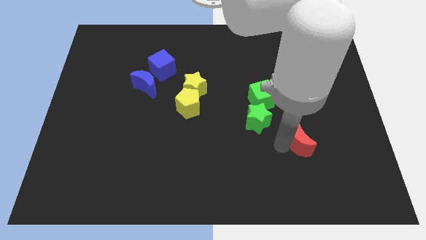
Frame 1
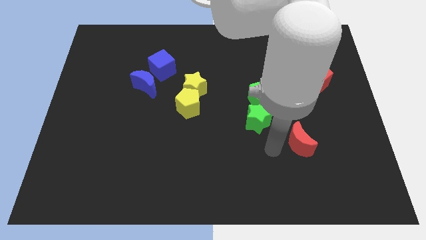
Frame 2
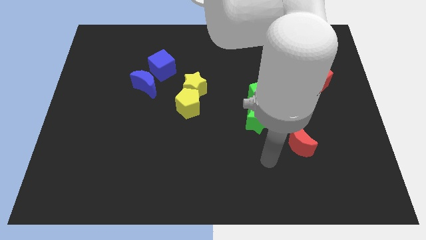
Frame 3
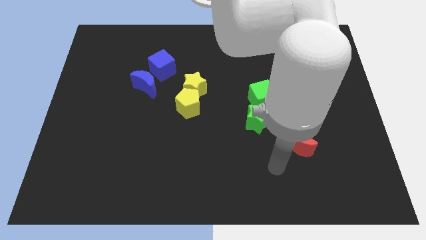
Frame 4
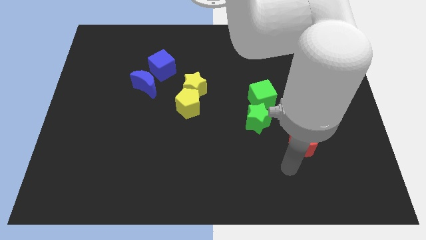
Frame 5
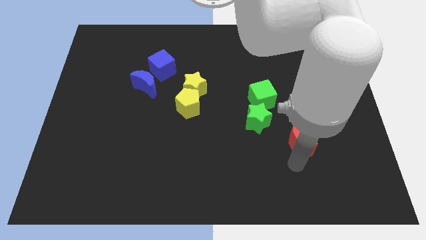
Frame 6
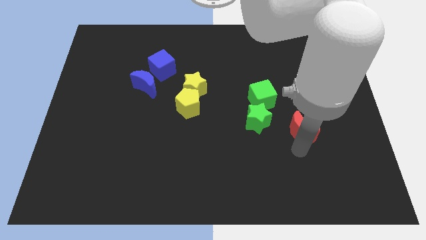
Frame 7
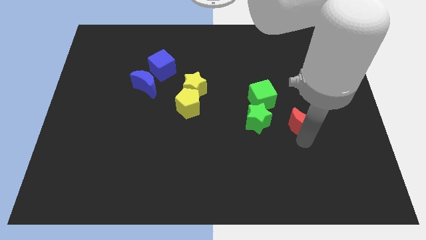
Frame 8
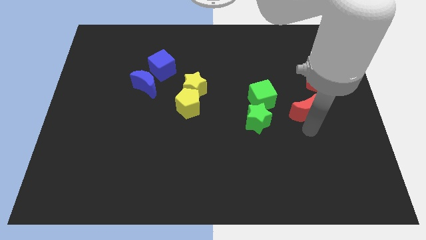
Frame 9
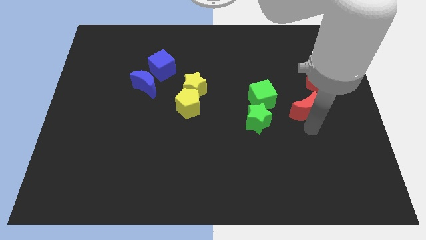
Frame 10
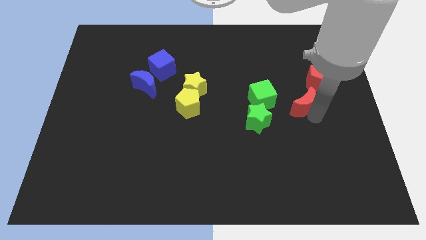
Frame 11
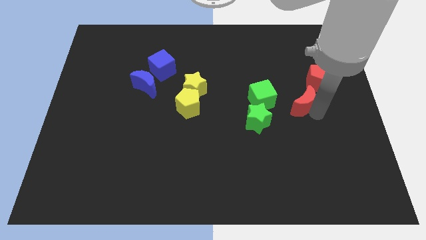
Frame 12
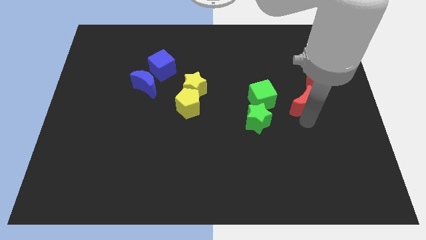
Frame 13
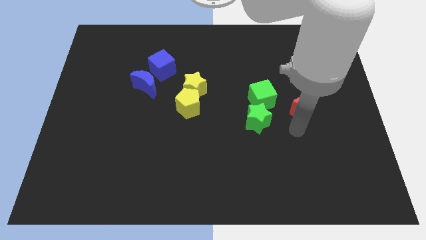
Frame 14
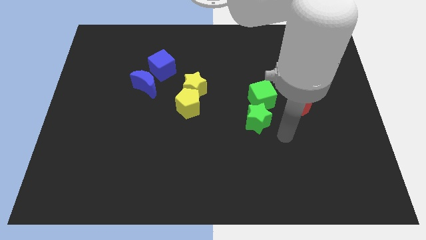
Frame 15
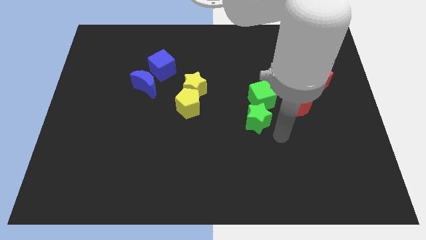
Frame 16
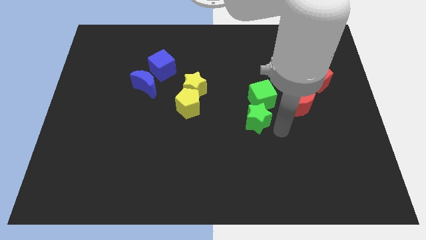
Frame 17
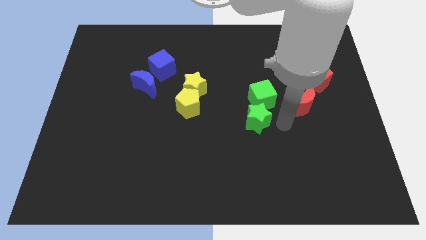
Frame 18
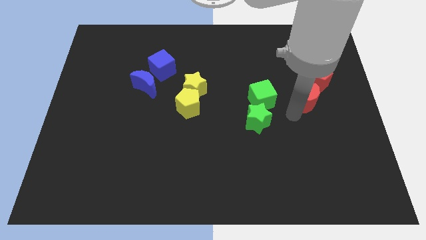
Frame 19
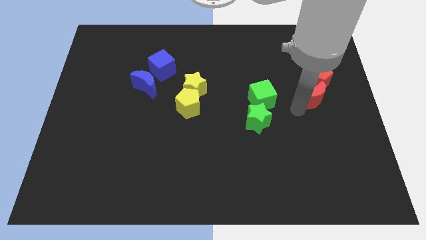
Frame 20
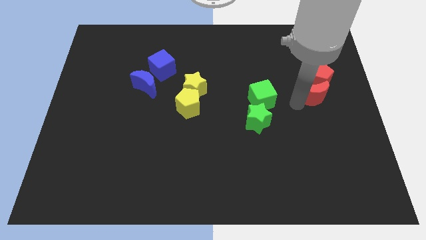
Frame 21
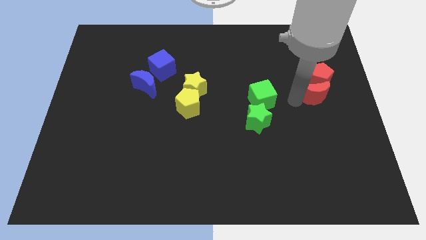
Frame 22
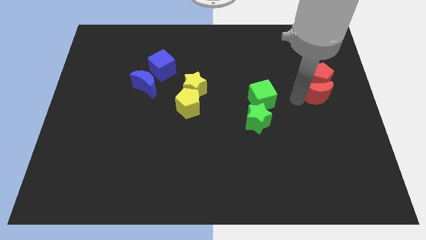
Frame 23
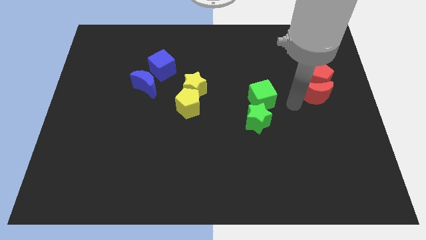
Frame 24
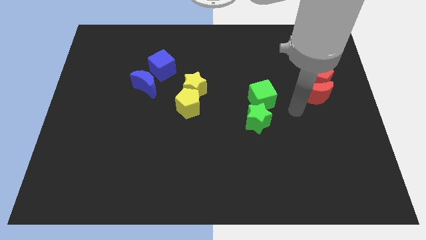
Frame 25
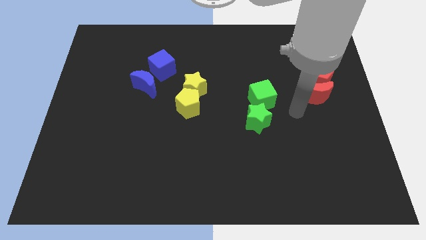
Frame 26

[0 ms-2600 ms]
push the red moon into the red pentagon

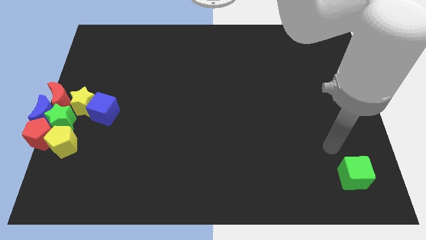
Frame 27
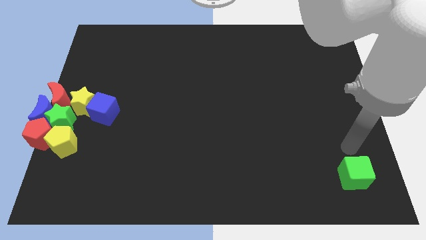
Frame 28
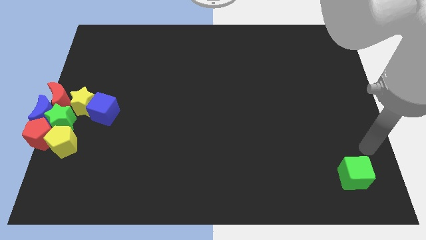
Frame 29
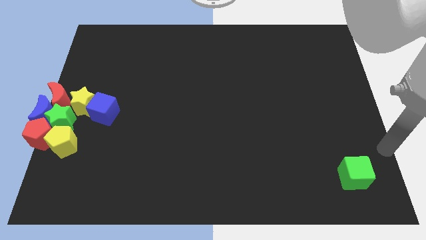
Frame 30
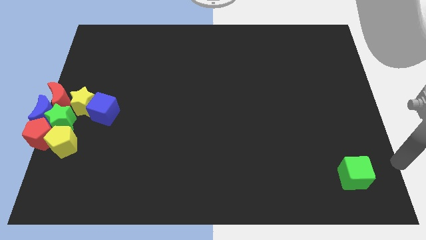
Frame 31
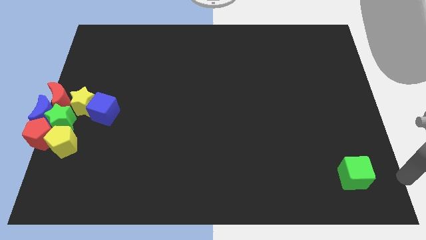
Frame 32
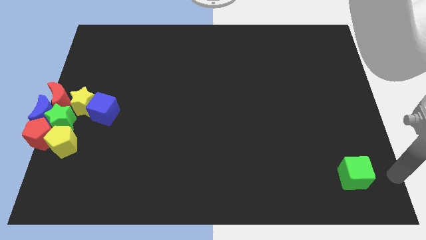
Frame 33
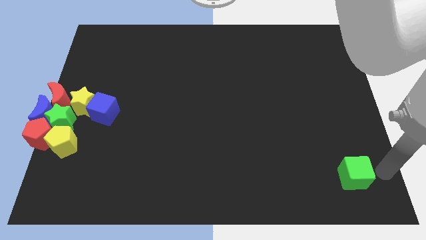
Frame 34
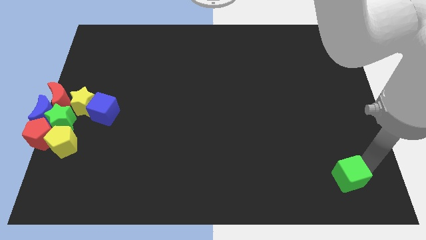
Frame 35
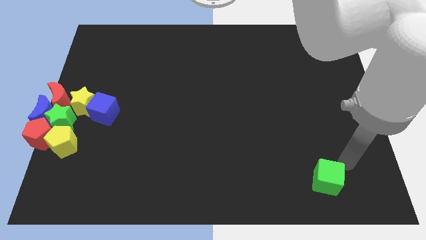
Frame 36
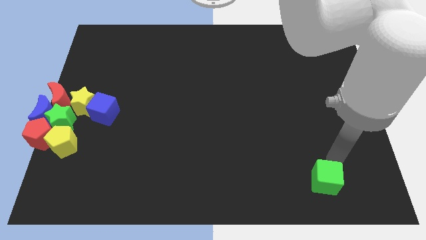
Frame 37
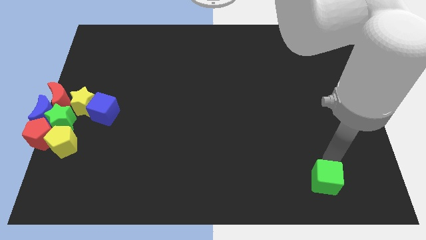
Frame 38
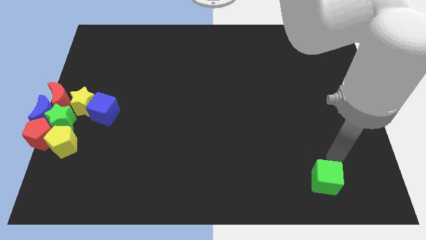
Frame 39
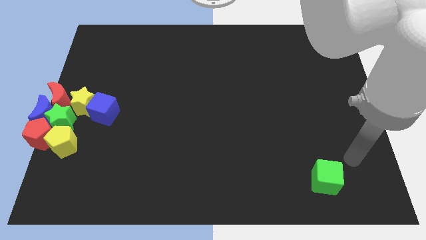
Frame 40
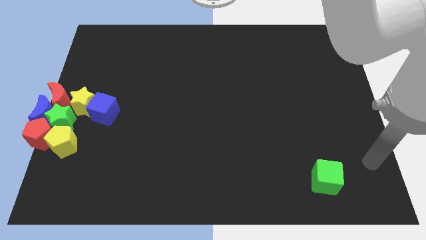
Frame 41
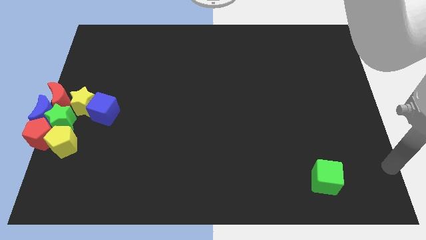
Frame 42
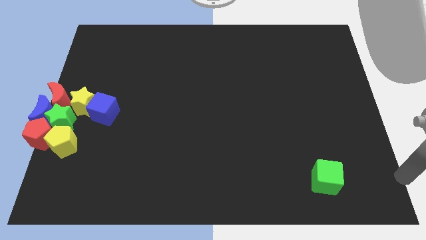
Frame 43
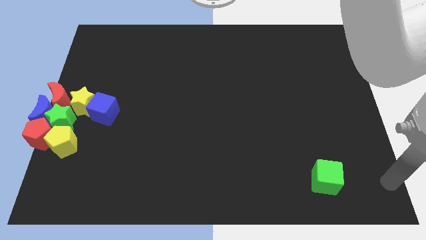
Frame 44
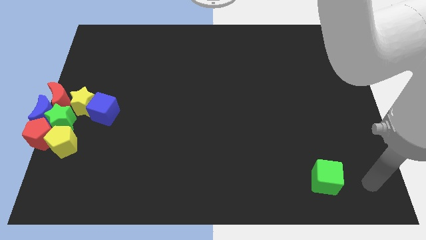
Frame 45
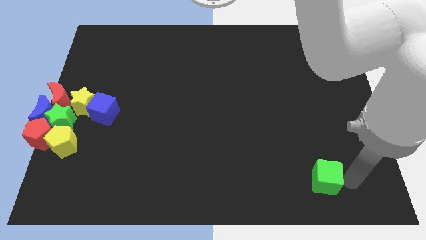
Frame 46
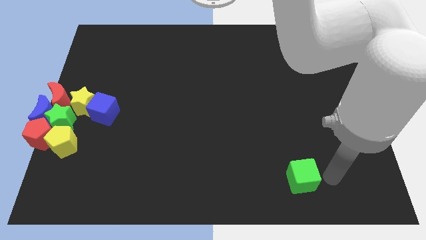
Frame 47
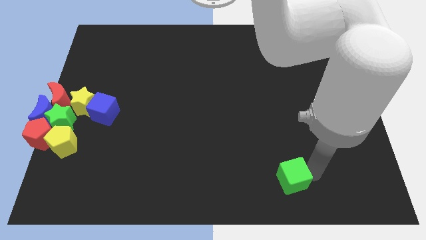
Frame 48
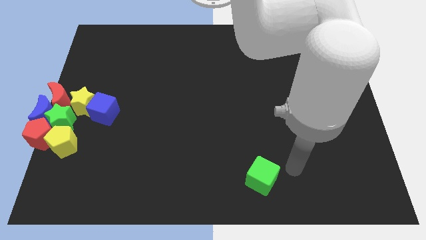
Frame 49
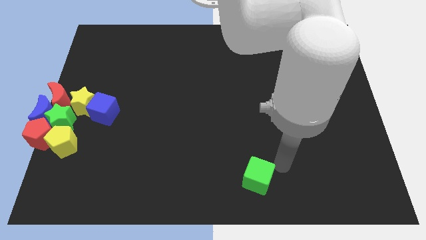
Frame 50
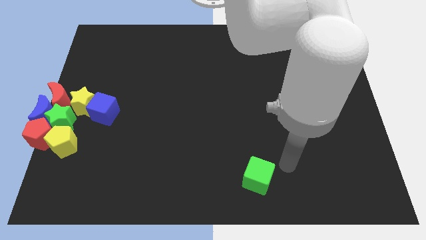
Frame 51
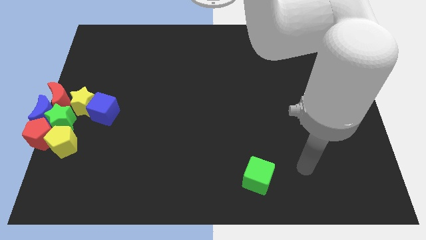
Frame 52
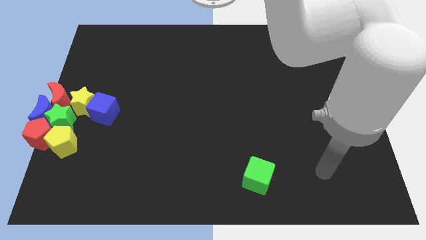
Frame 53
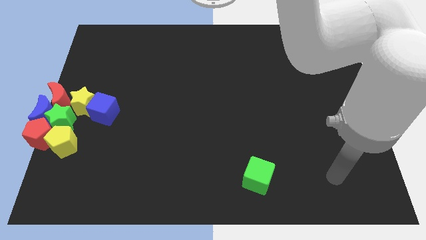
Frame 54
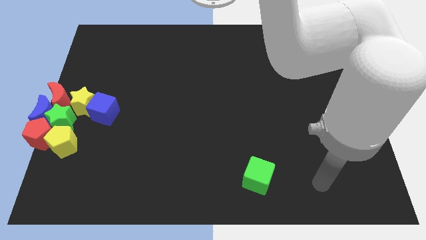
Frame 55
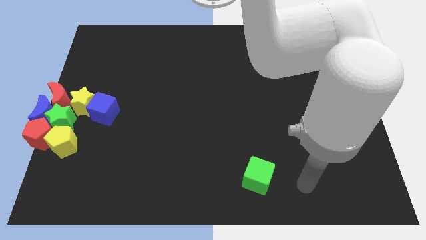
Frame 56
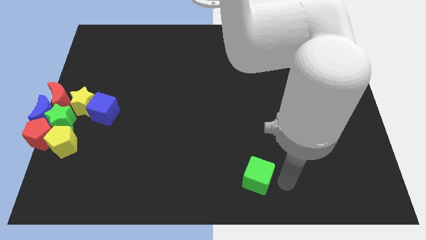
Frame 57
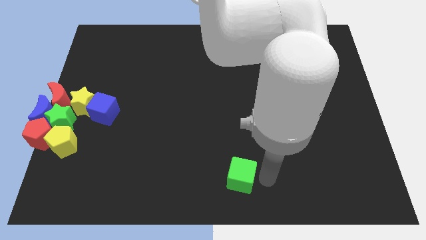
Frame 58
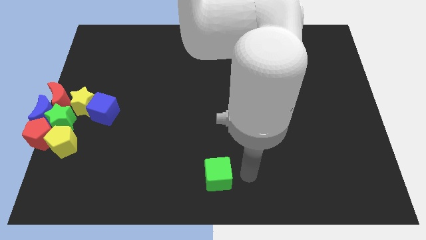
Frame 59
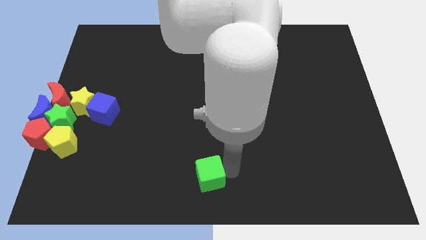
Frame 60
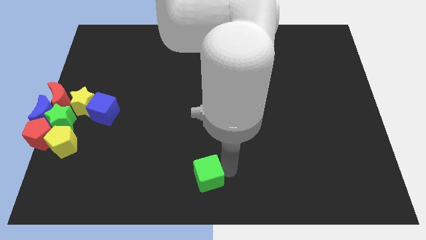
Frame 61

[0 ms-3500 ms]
place green cube to the bottom center of the board

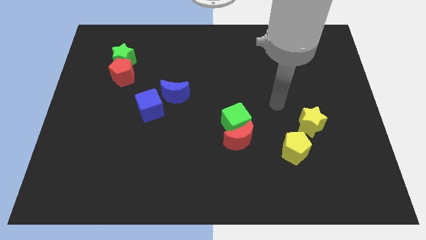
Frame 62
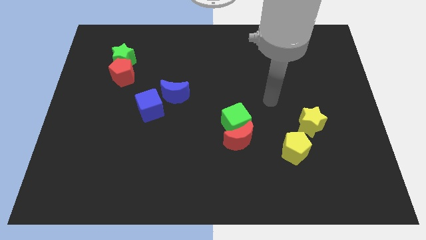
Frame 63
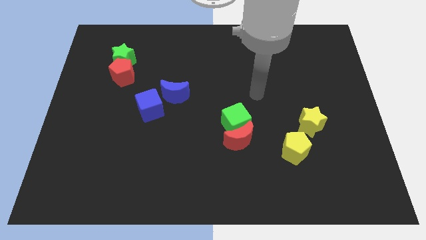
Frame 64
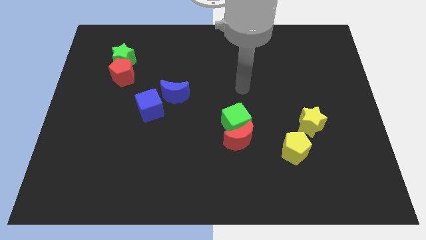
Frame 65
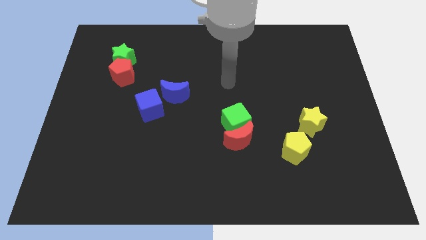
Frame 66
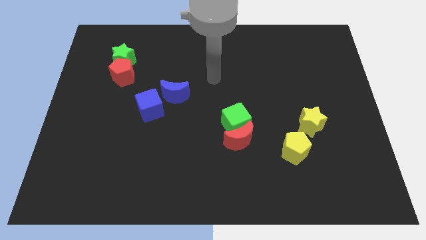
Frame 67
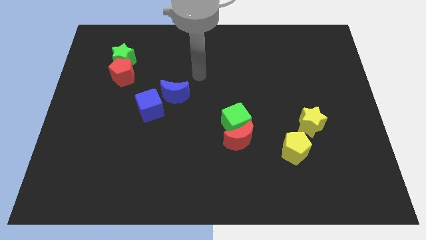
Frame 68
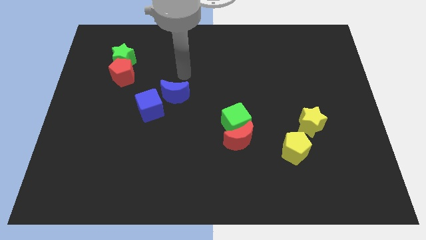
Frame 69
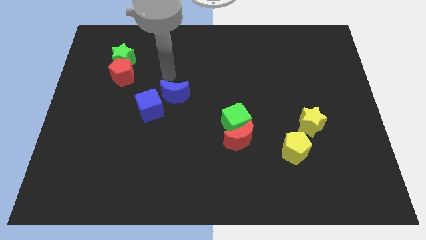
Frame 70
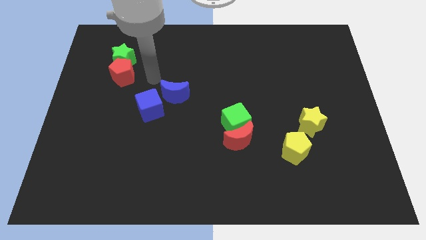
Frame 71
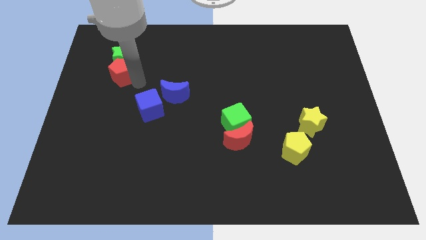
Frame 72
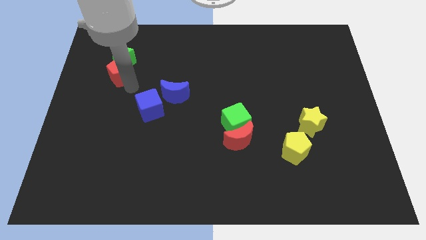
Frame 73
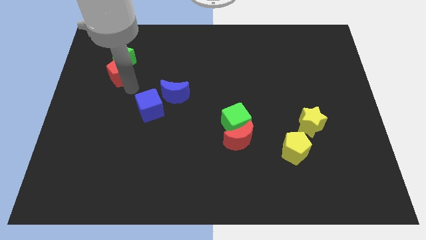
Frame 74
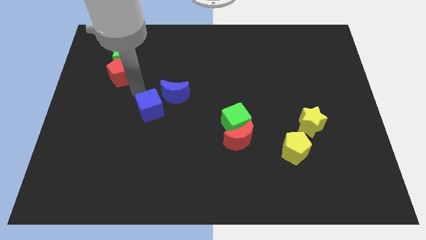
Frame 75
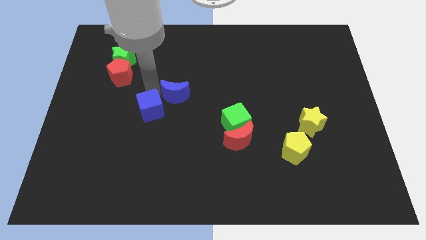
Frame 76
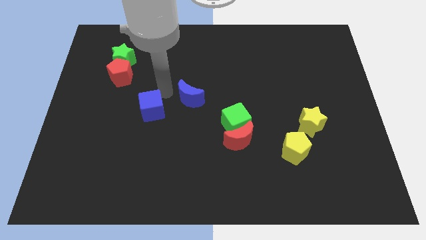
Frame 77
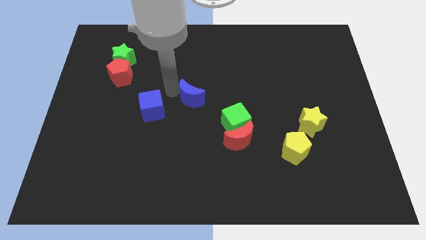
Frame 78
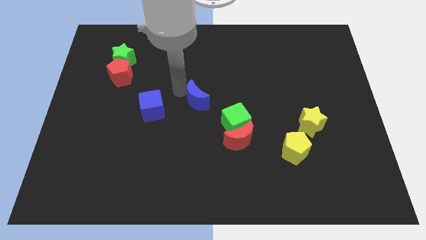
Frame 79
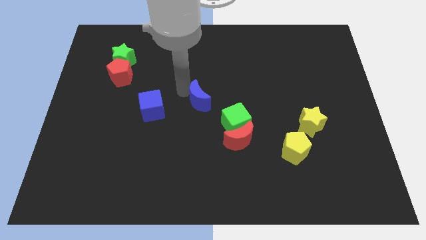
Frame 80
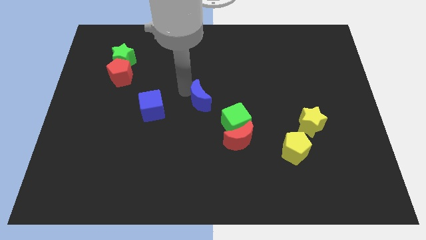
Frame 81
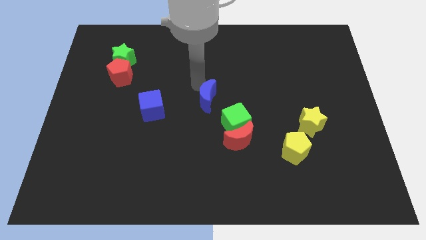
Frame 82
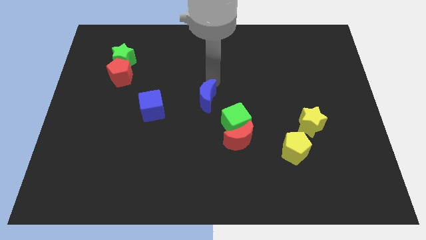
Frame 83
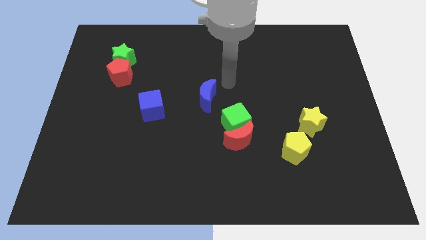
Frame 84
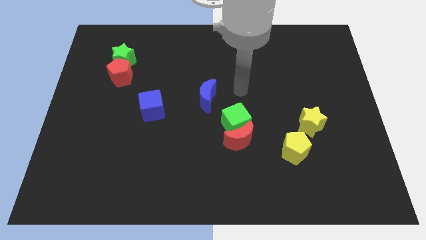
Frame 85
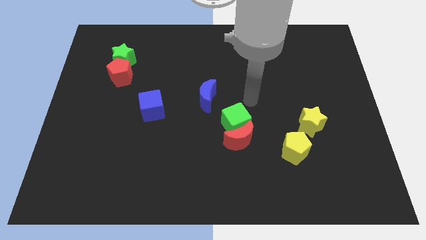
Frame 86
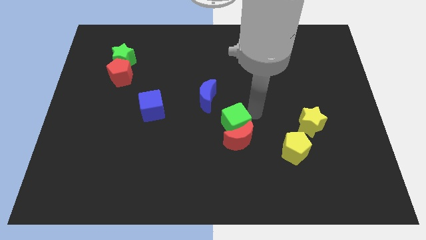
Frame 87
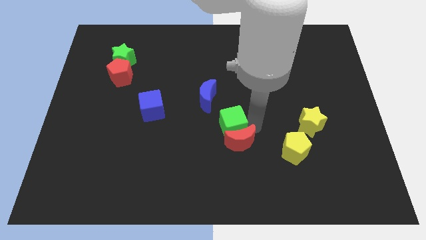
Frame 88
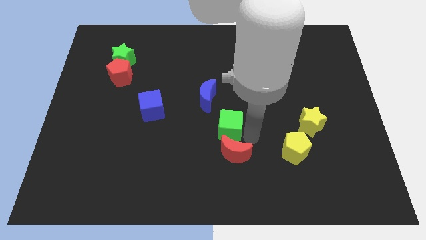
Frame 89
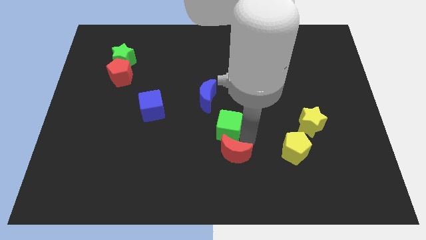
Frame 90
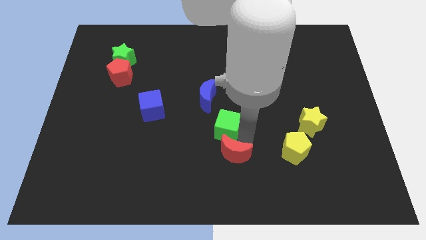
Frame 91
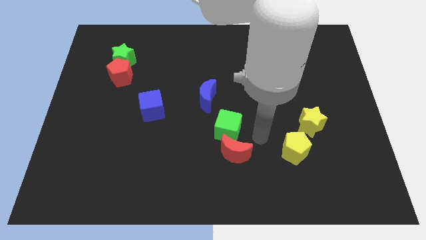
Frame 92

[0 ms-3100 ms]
move the blue crescent to the center of the board
